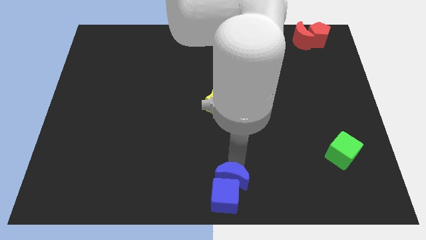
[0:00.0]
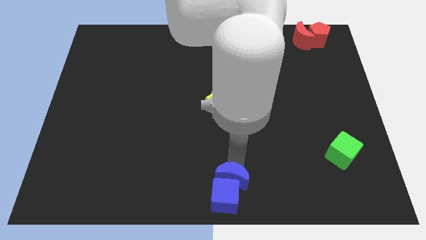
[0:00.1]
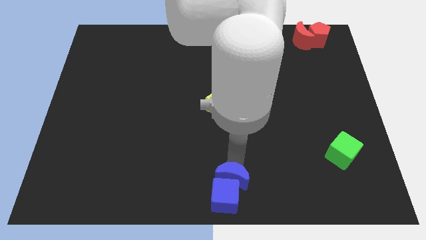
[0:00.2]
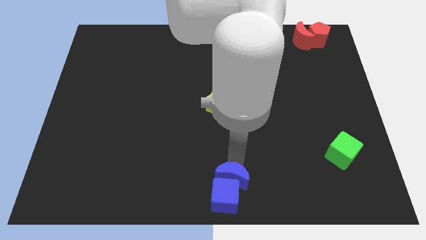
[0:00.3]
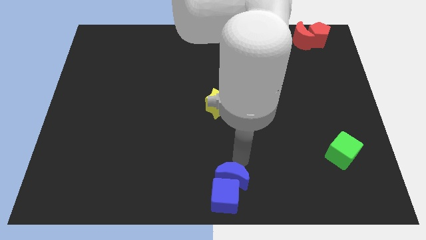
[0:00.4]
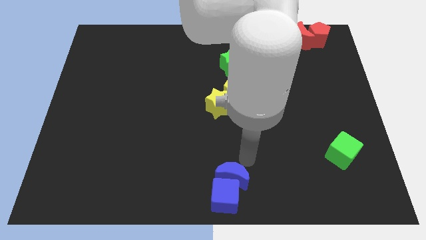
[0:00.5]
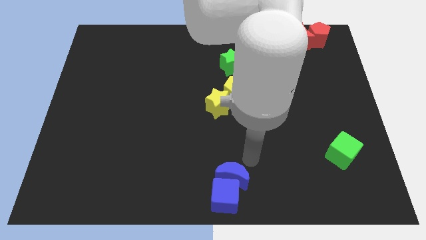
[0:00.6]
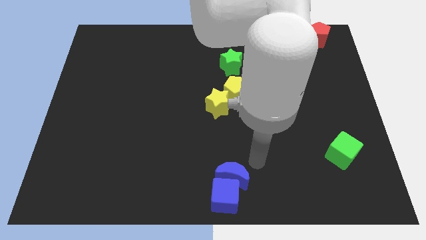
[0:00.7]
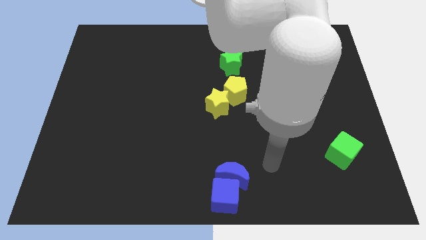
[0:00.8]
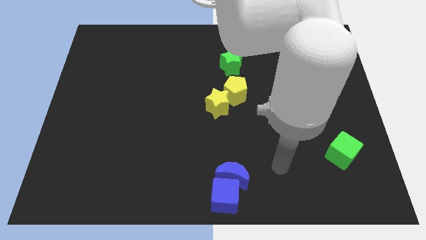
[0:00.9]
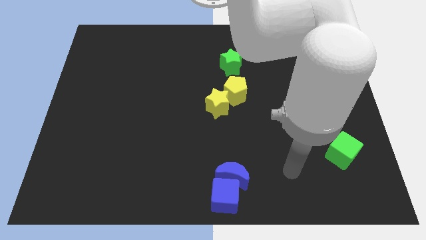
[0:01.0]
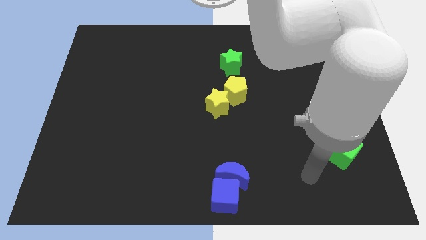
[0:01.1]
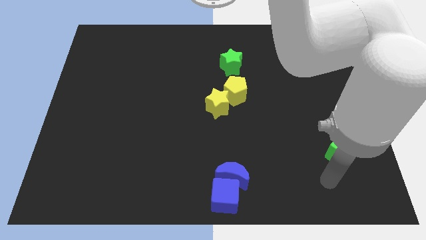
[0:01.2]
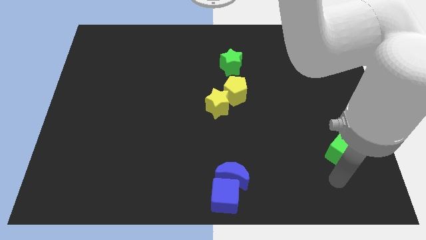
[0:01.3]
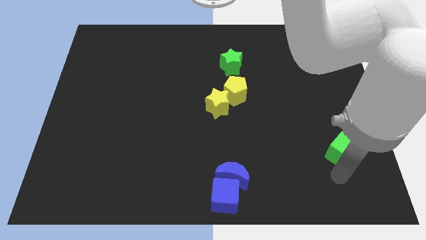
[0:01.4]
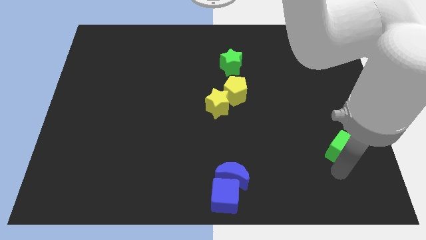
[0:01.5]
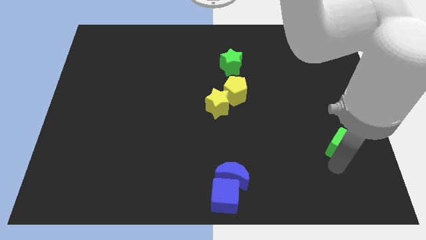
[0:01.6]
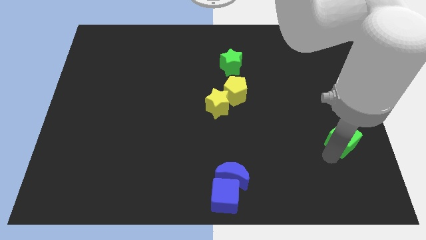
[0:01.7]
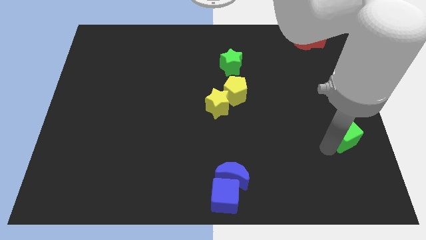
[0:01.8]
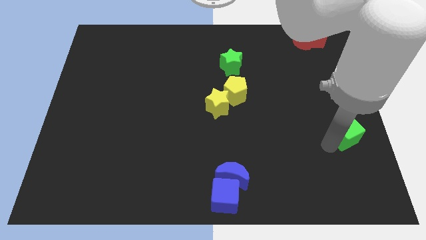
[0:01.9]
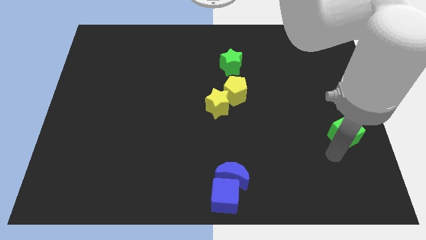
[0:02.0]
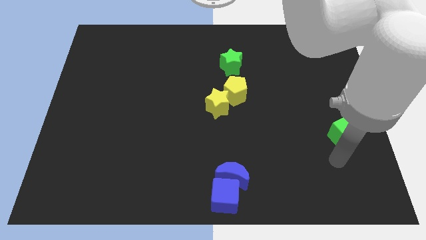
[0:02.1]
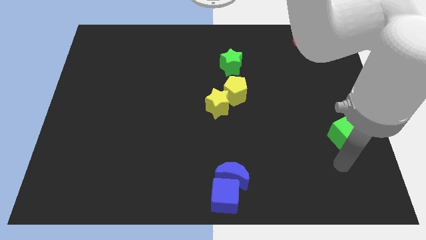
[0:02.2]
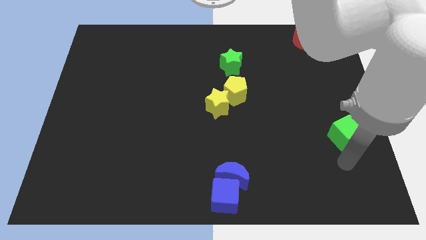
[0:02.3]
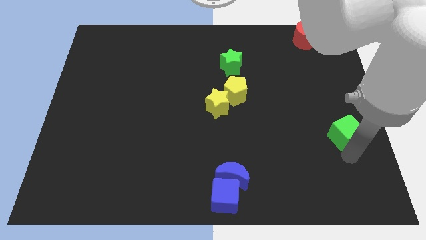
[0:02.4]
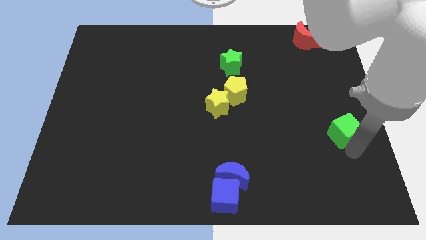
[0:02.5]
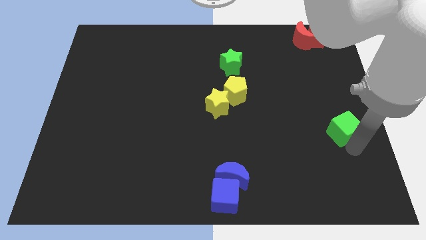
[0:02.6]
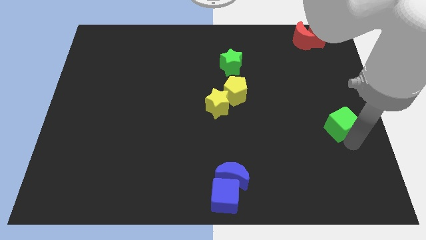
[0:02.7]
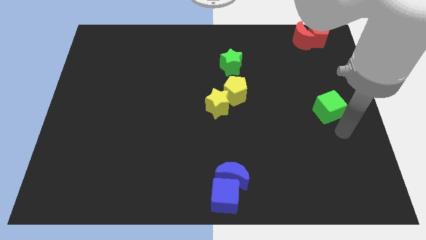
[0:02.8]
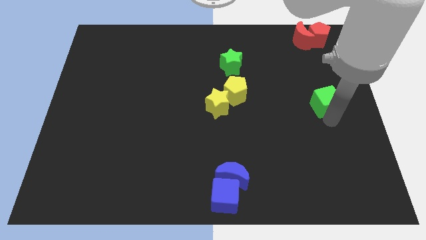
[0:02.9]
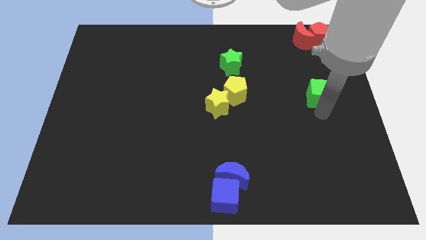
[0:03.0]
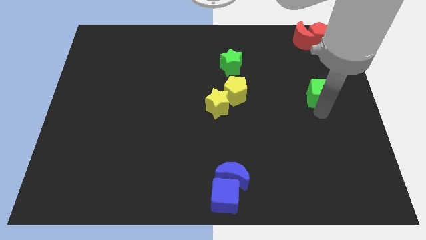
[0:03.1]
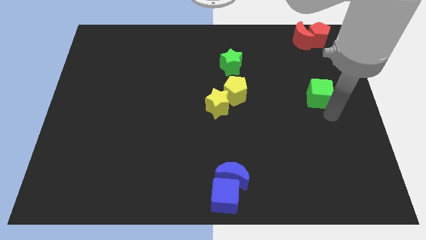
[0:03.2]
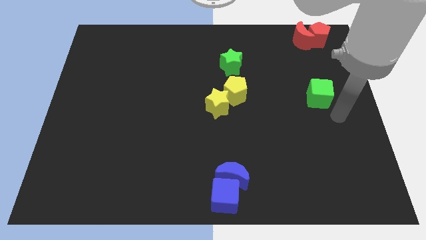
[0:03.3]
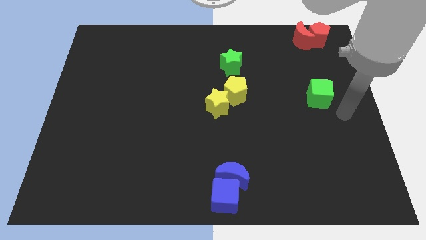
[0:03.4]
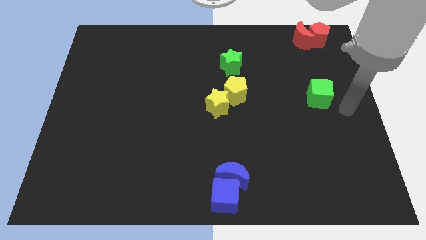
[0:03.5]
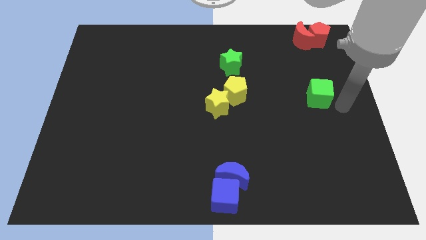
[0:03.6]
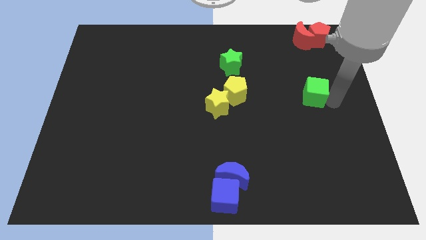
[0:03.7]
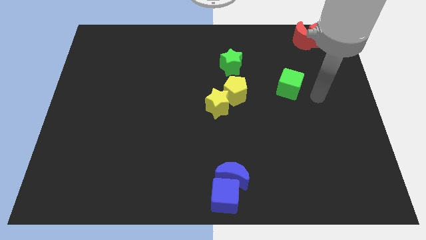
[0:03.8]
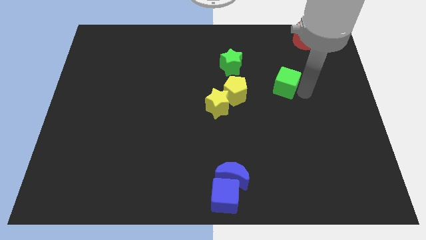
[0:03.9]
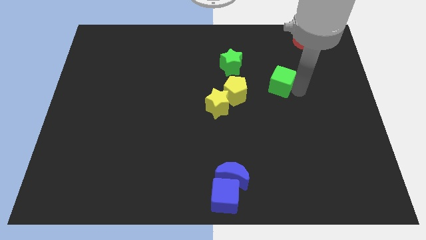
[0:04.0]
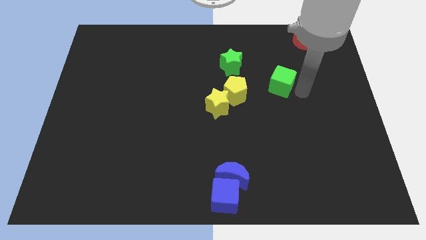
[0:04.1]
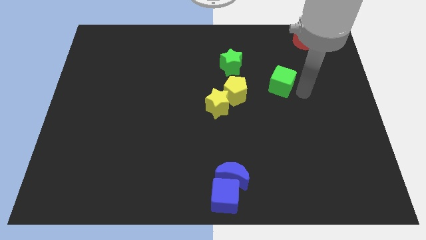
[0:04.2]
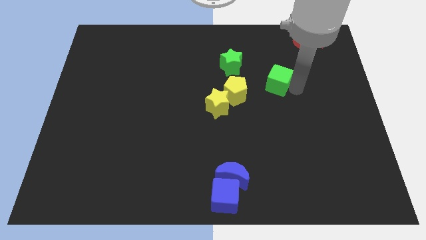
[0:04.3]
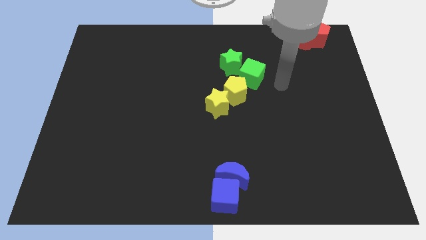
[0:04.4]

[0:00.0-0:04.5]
push green cube close to green star

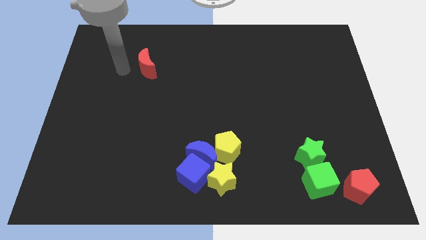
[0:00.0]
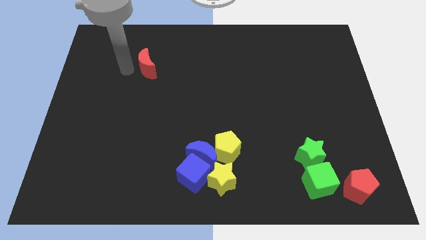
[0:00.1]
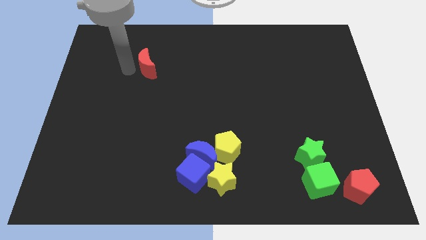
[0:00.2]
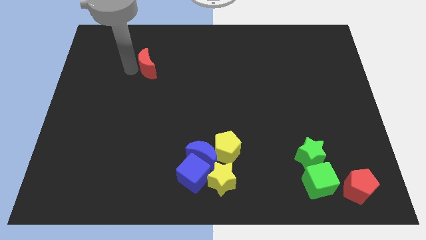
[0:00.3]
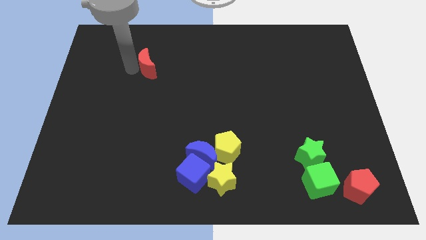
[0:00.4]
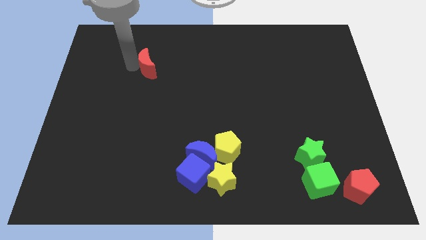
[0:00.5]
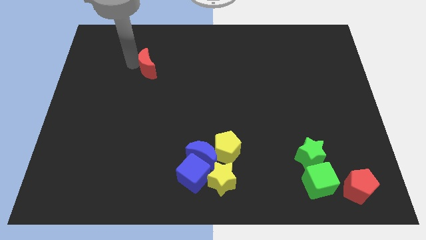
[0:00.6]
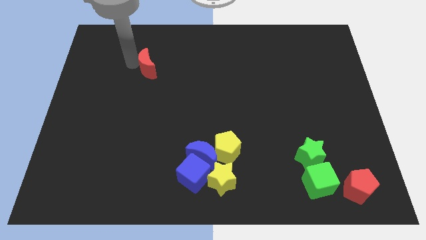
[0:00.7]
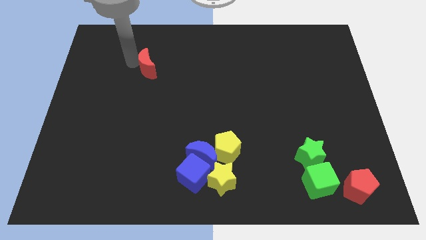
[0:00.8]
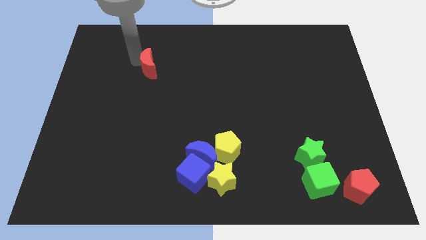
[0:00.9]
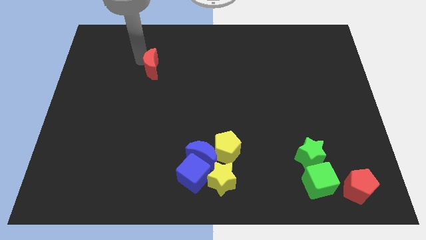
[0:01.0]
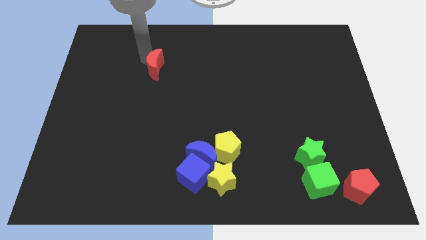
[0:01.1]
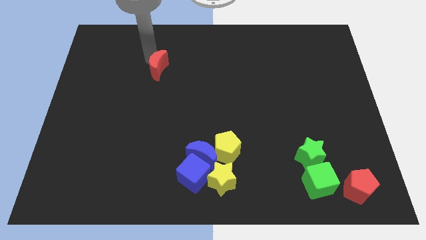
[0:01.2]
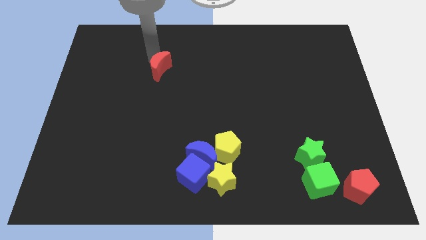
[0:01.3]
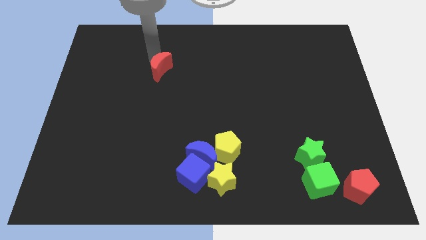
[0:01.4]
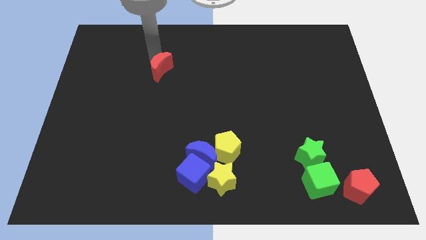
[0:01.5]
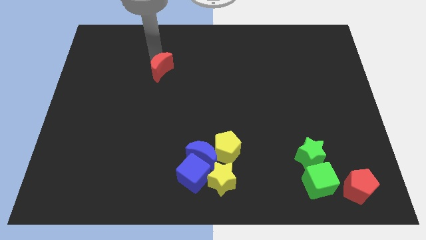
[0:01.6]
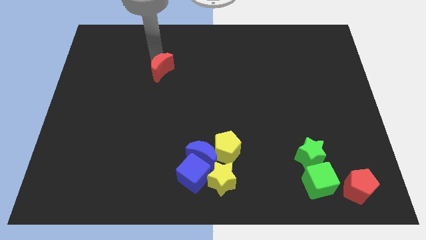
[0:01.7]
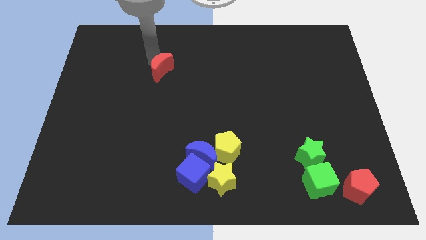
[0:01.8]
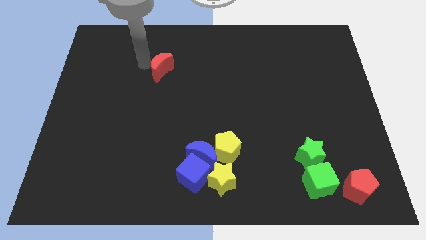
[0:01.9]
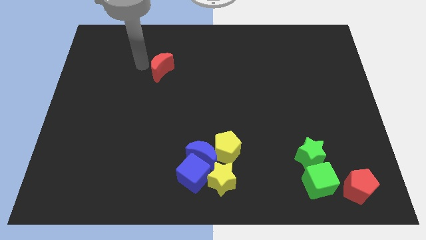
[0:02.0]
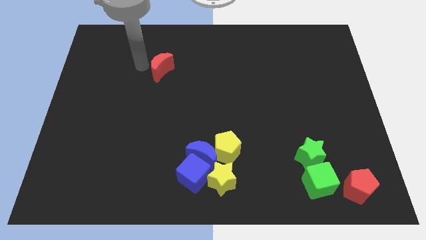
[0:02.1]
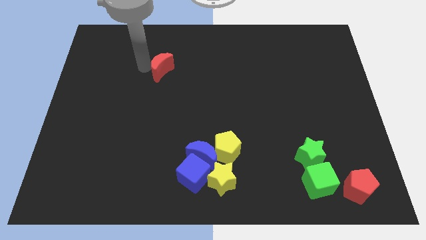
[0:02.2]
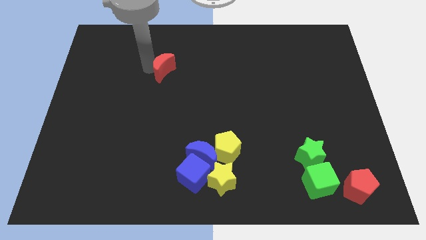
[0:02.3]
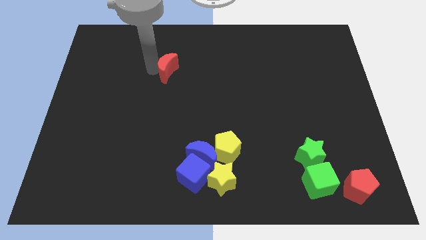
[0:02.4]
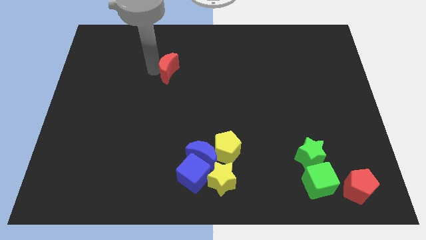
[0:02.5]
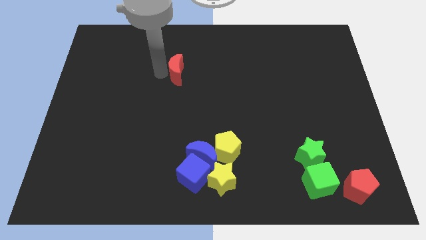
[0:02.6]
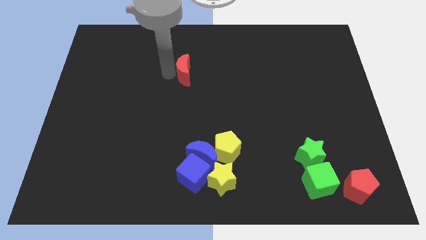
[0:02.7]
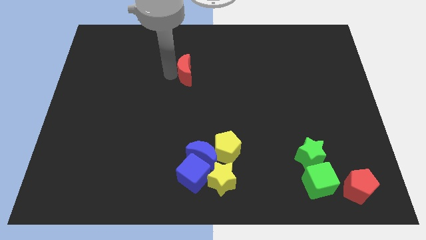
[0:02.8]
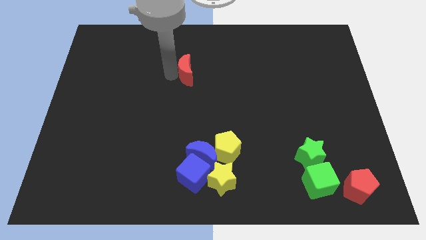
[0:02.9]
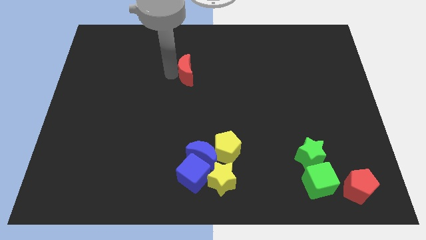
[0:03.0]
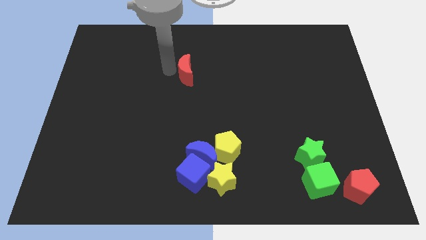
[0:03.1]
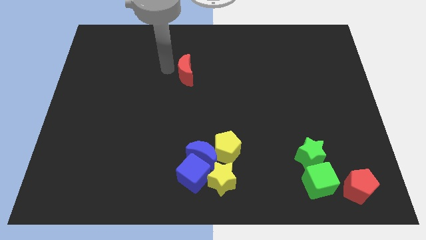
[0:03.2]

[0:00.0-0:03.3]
put the red crescent at the top side of the group of blue blocks

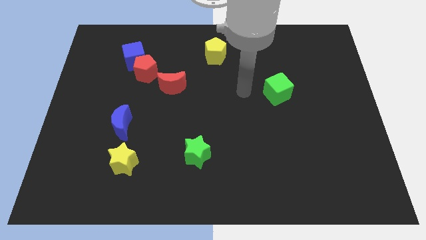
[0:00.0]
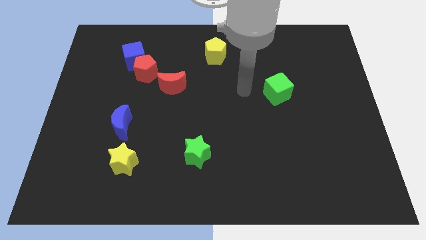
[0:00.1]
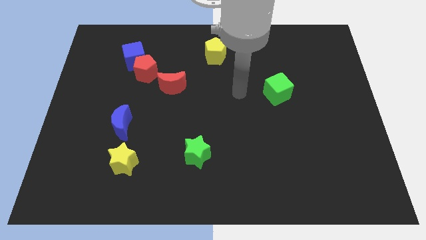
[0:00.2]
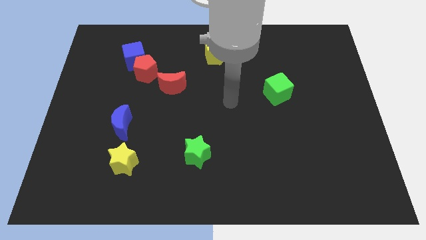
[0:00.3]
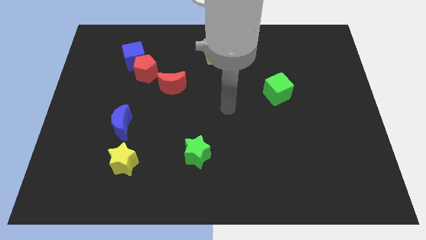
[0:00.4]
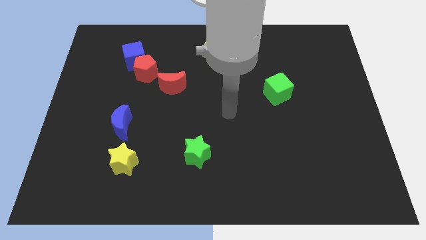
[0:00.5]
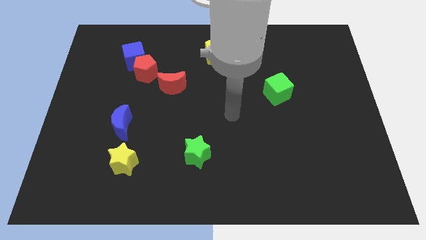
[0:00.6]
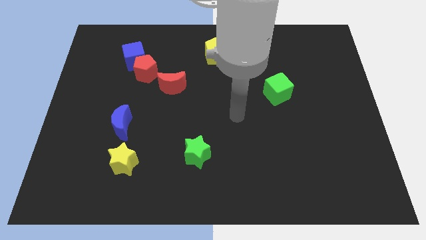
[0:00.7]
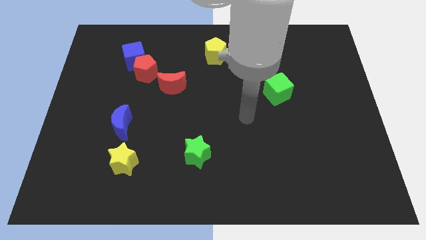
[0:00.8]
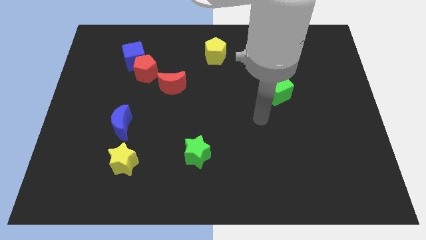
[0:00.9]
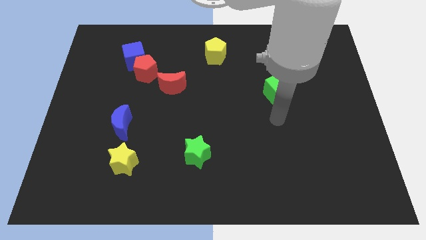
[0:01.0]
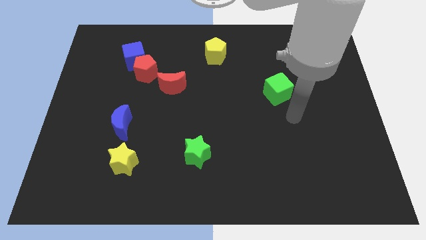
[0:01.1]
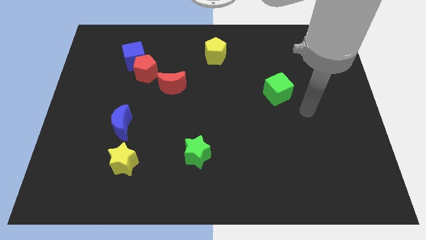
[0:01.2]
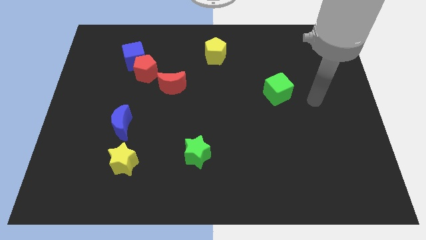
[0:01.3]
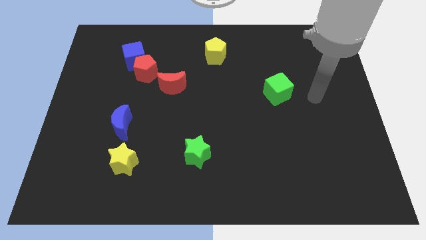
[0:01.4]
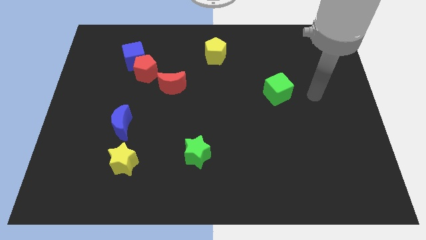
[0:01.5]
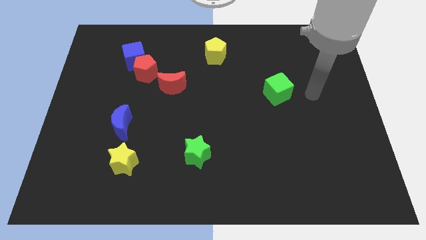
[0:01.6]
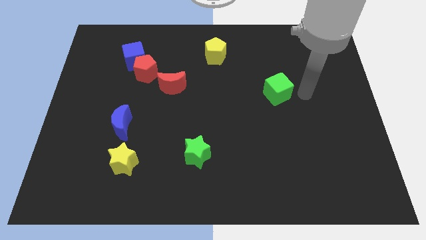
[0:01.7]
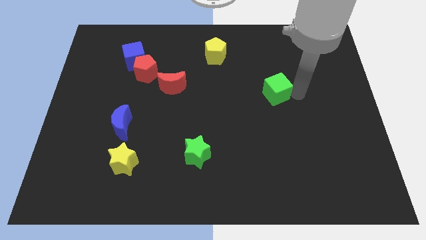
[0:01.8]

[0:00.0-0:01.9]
move your arm and point to the right of green cube
